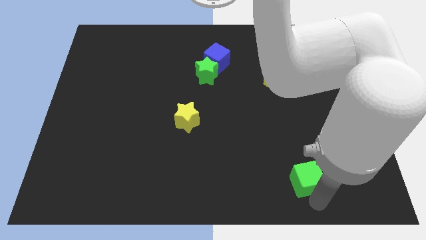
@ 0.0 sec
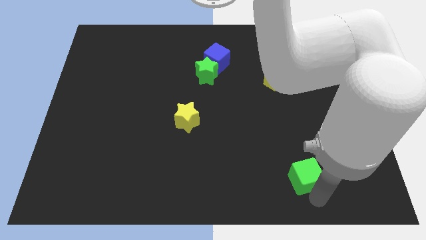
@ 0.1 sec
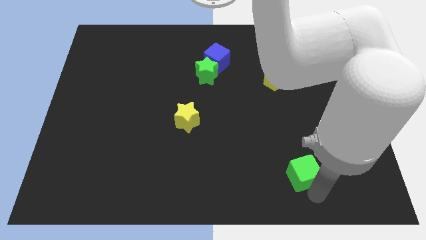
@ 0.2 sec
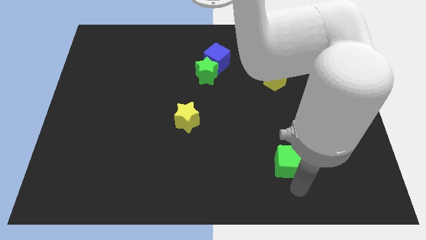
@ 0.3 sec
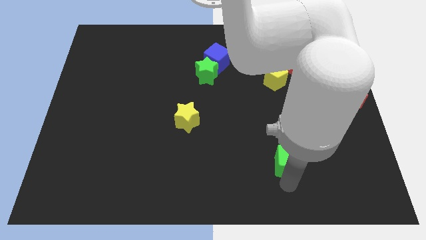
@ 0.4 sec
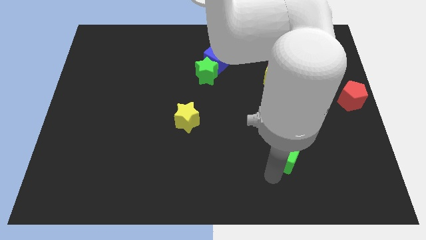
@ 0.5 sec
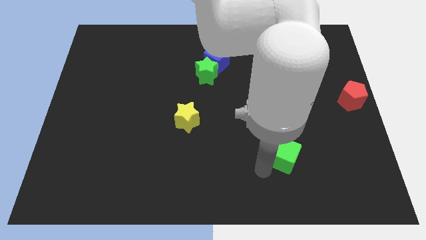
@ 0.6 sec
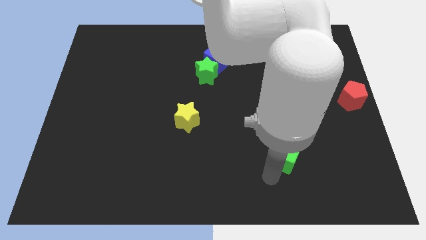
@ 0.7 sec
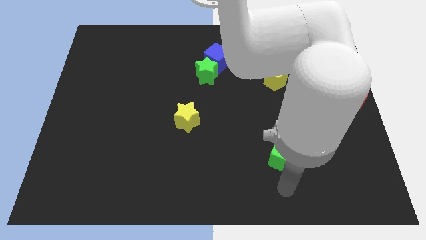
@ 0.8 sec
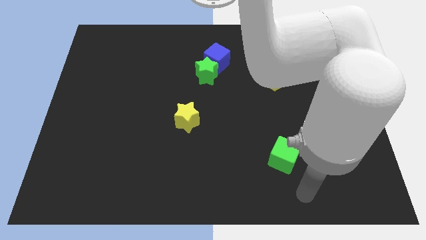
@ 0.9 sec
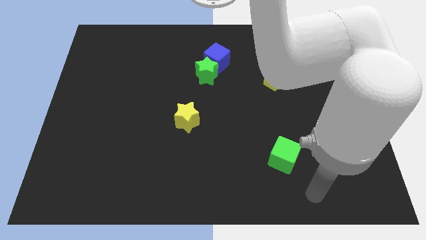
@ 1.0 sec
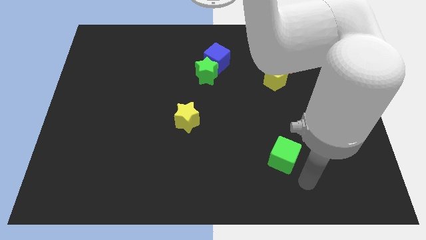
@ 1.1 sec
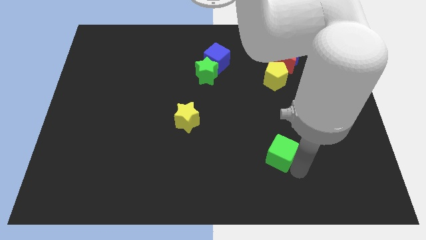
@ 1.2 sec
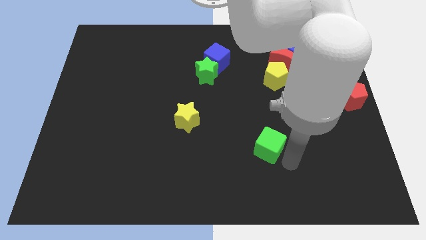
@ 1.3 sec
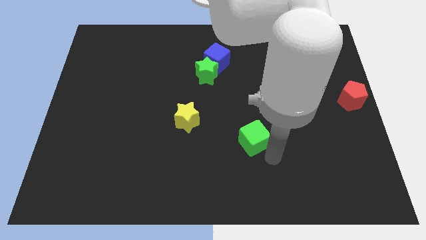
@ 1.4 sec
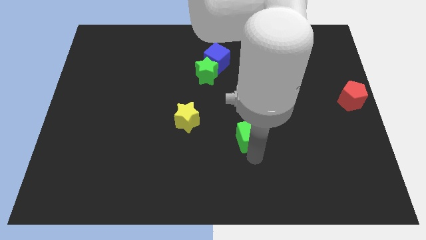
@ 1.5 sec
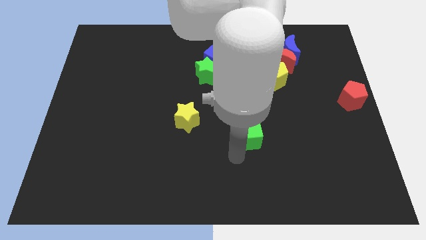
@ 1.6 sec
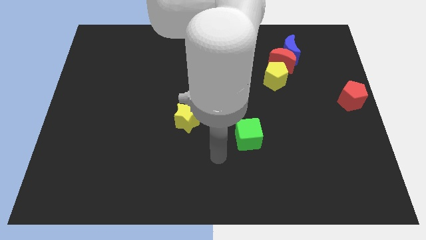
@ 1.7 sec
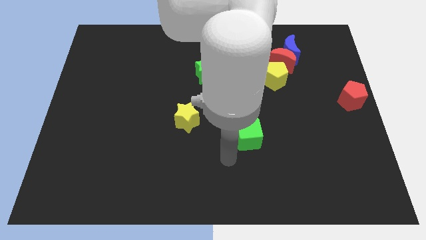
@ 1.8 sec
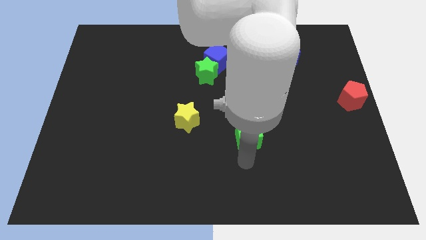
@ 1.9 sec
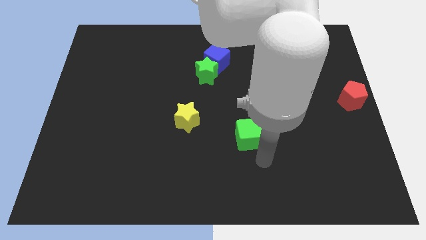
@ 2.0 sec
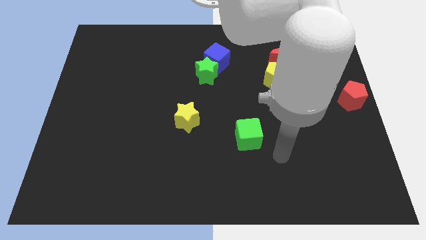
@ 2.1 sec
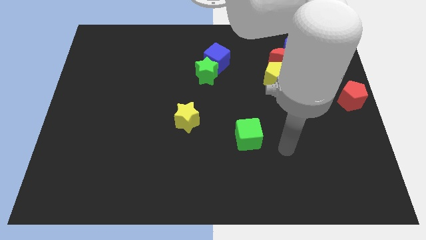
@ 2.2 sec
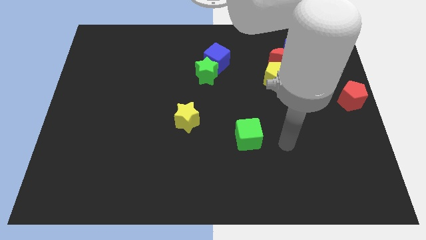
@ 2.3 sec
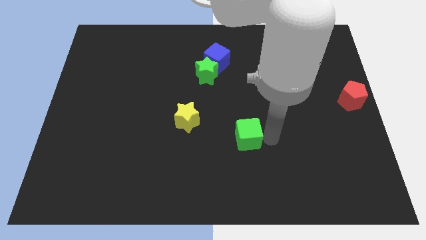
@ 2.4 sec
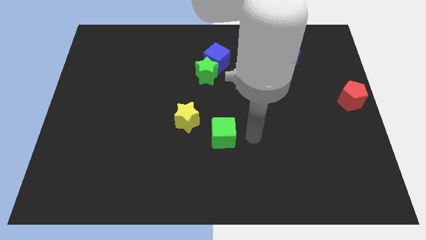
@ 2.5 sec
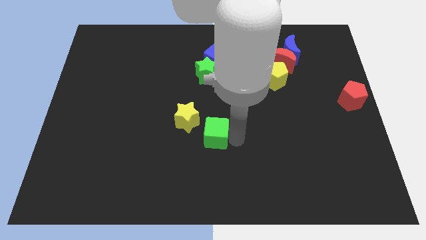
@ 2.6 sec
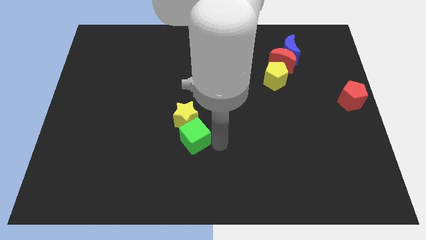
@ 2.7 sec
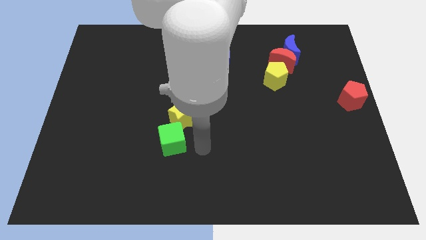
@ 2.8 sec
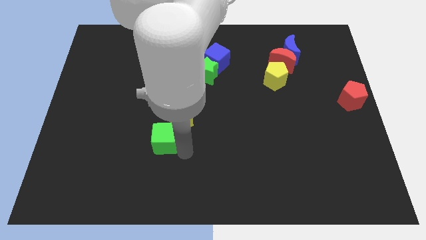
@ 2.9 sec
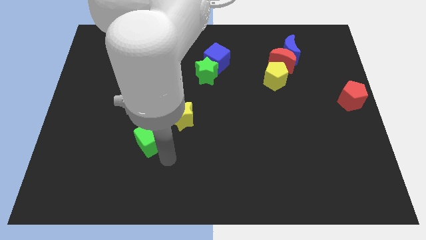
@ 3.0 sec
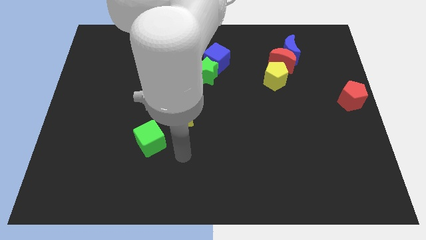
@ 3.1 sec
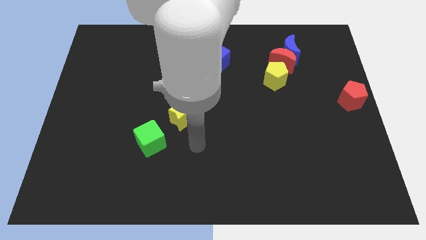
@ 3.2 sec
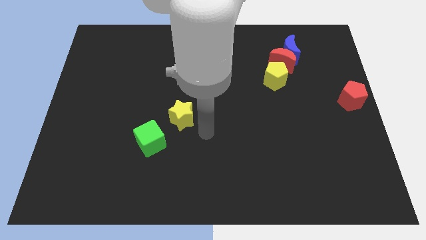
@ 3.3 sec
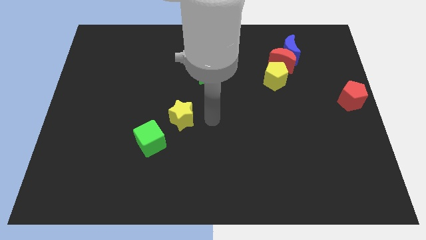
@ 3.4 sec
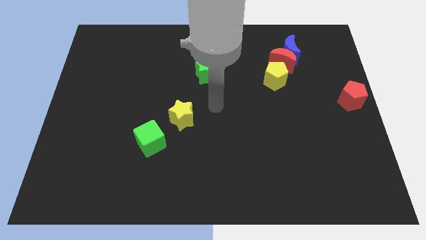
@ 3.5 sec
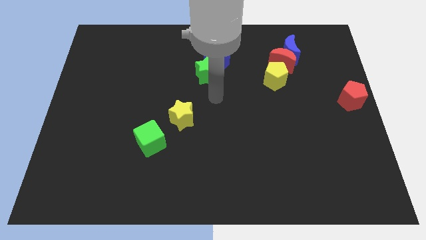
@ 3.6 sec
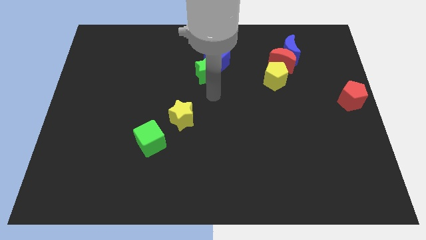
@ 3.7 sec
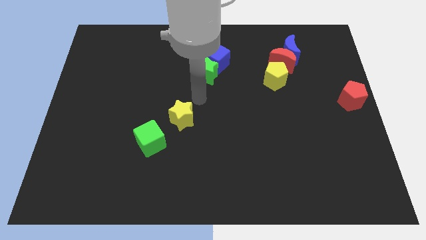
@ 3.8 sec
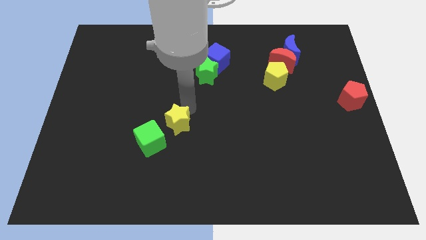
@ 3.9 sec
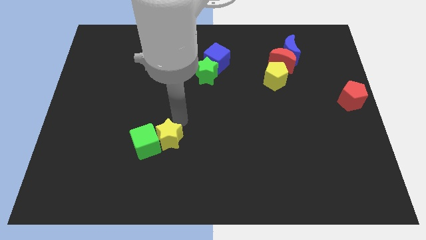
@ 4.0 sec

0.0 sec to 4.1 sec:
attach the yellow star to the green cube

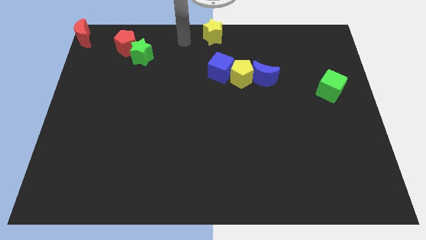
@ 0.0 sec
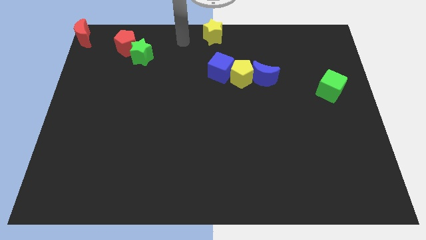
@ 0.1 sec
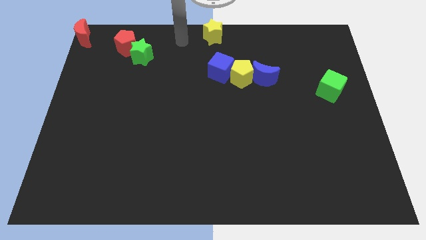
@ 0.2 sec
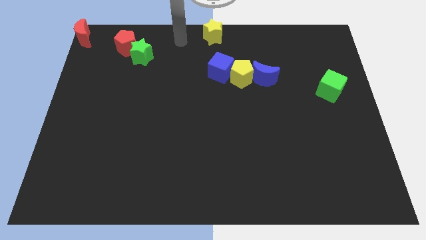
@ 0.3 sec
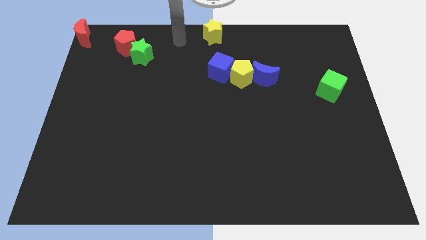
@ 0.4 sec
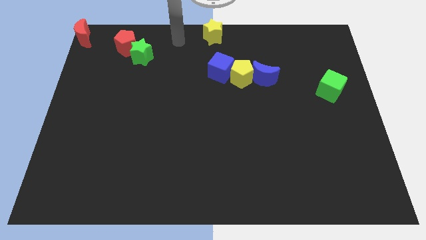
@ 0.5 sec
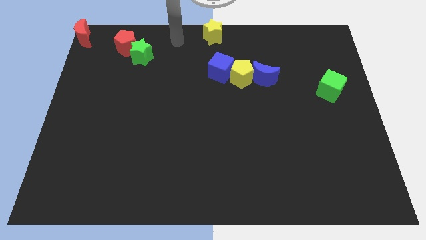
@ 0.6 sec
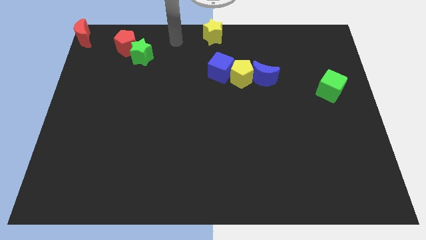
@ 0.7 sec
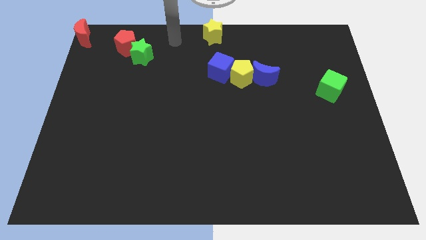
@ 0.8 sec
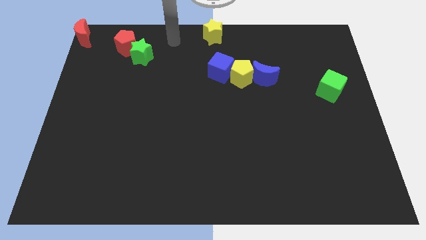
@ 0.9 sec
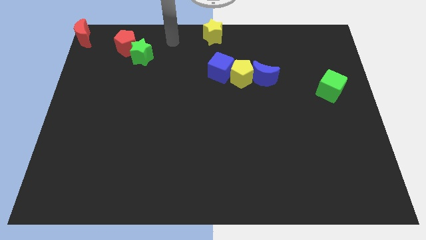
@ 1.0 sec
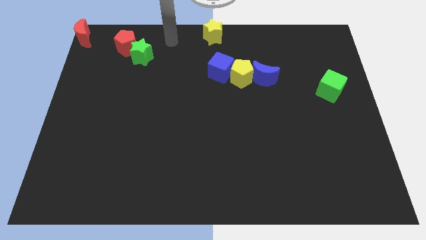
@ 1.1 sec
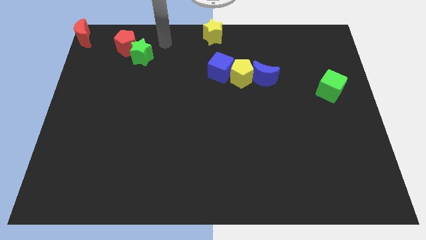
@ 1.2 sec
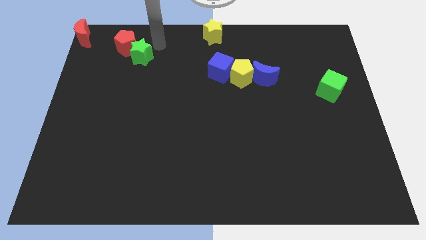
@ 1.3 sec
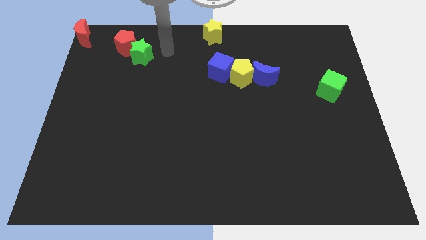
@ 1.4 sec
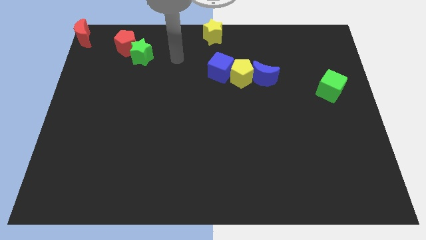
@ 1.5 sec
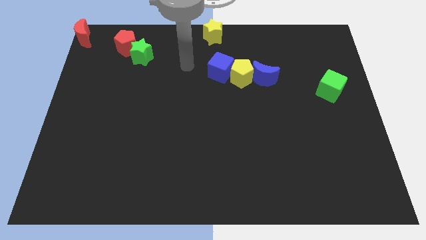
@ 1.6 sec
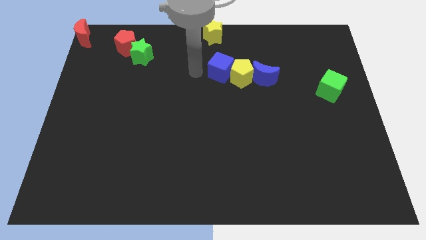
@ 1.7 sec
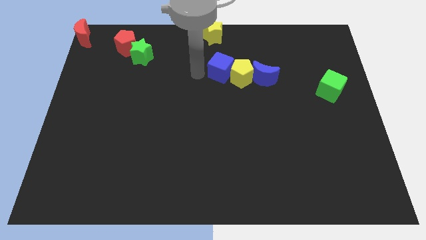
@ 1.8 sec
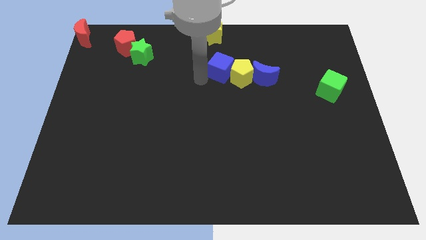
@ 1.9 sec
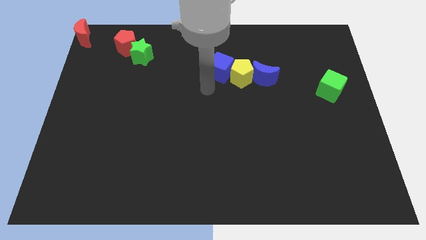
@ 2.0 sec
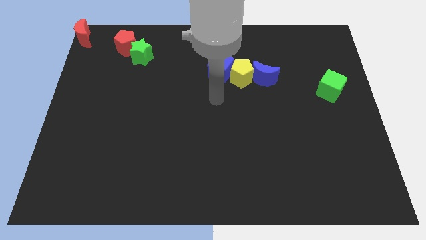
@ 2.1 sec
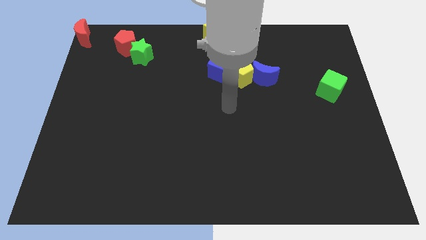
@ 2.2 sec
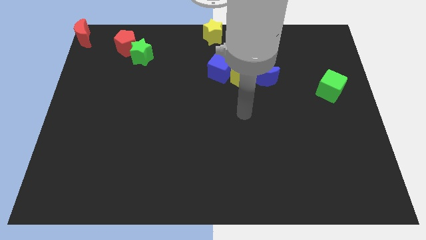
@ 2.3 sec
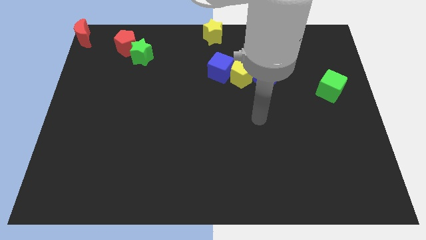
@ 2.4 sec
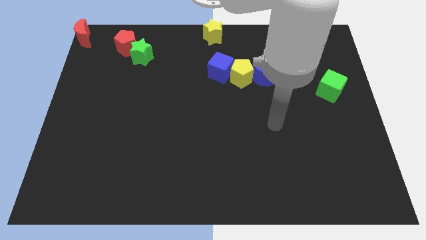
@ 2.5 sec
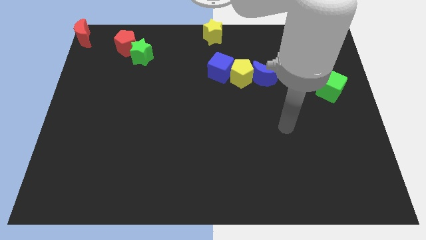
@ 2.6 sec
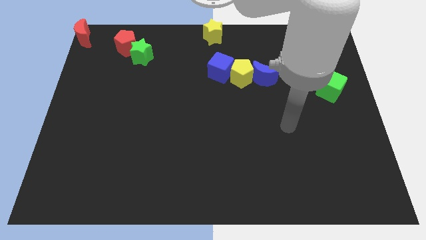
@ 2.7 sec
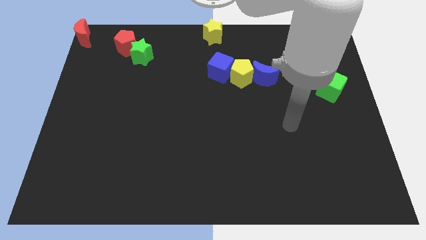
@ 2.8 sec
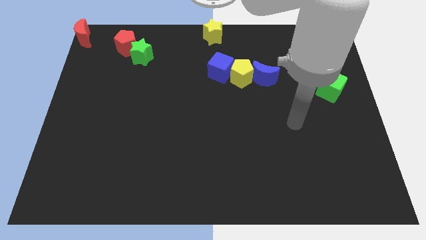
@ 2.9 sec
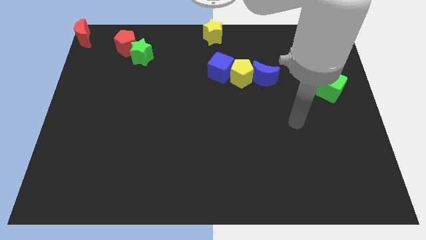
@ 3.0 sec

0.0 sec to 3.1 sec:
move your arm away from yellow star

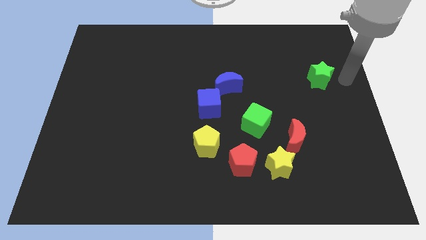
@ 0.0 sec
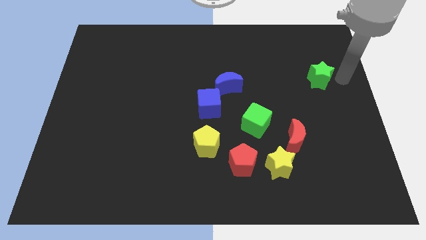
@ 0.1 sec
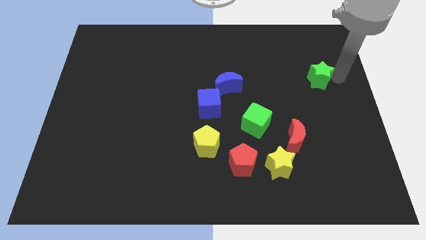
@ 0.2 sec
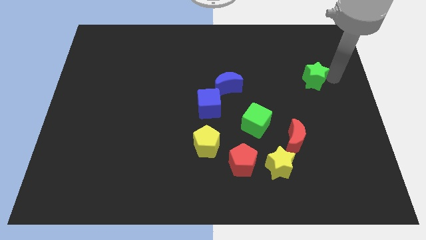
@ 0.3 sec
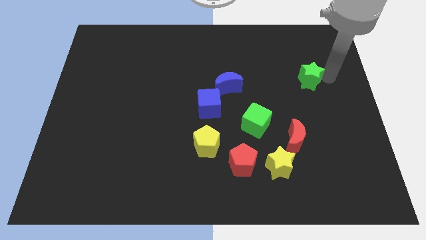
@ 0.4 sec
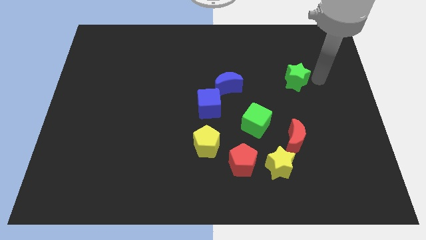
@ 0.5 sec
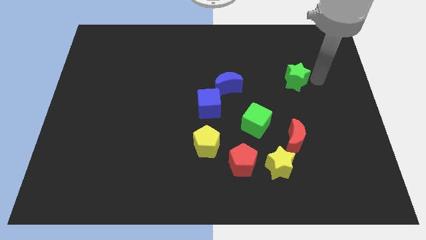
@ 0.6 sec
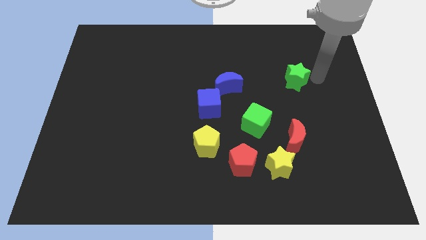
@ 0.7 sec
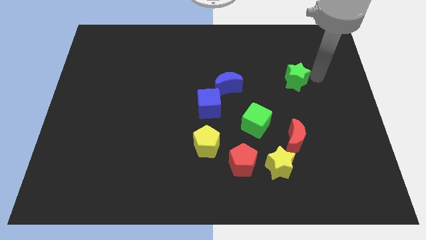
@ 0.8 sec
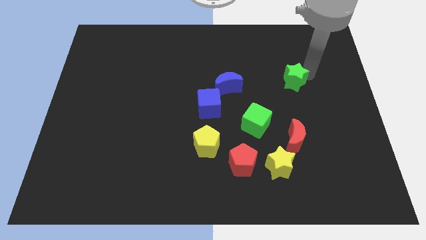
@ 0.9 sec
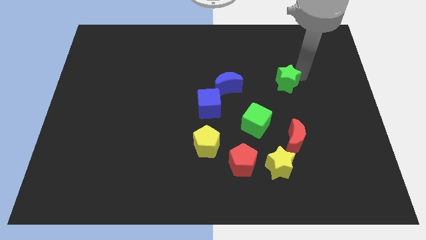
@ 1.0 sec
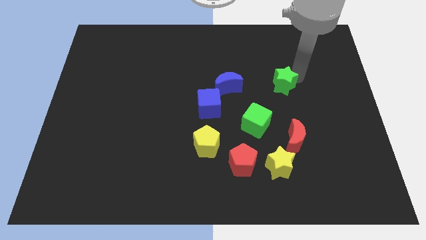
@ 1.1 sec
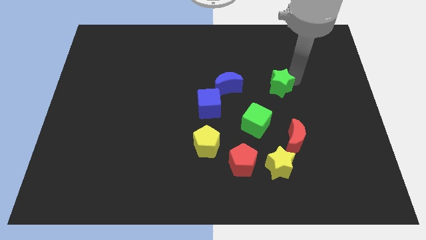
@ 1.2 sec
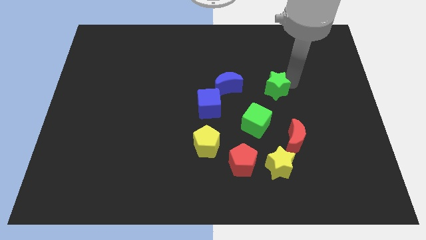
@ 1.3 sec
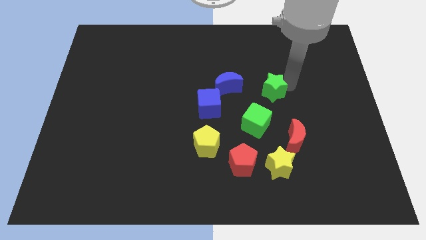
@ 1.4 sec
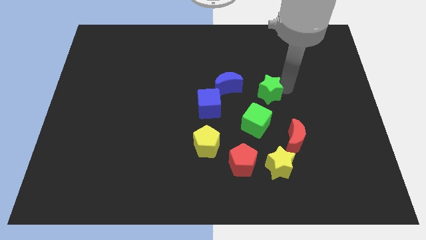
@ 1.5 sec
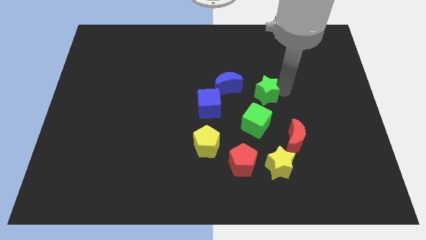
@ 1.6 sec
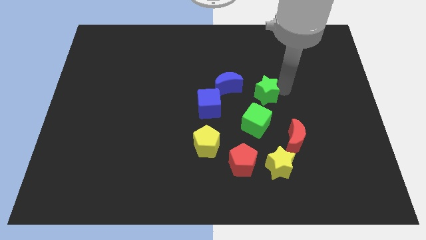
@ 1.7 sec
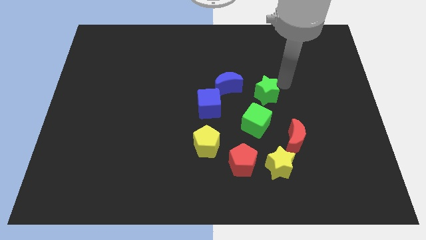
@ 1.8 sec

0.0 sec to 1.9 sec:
place the green star above the green cube
